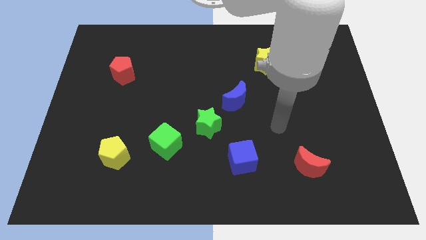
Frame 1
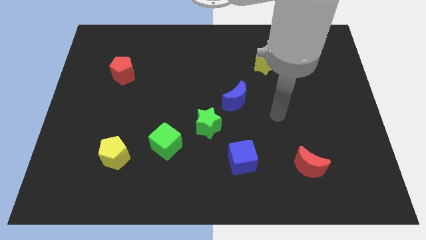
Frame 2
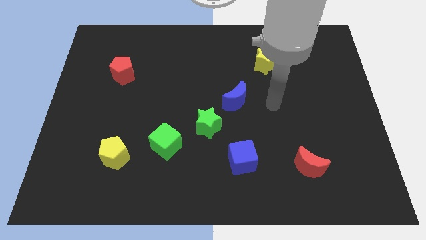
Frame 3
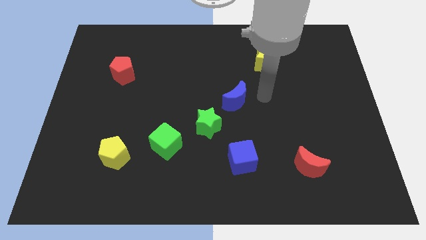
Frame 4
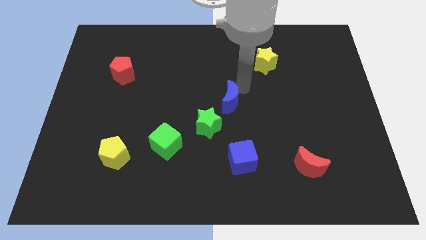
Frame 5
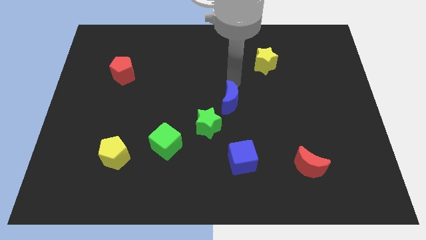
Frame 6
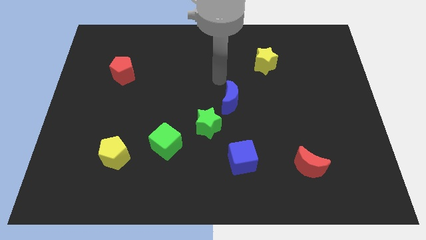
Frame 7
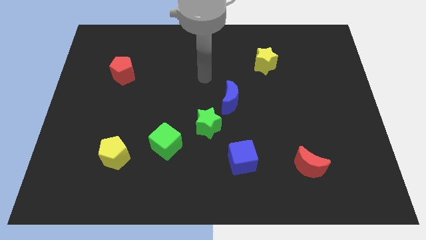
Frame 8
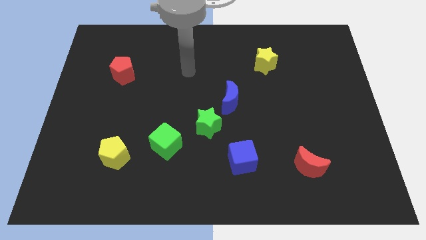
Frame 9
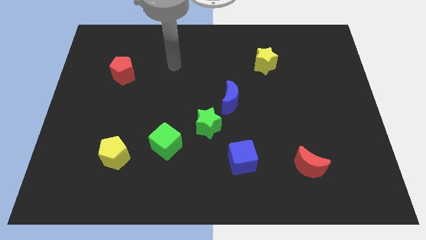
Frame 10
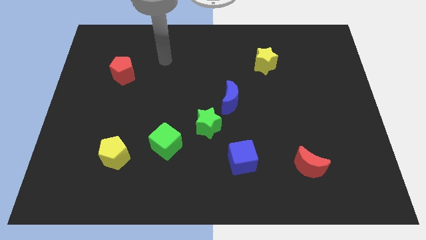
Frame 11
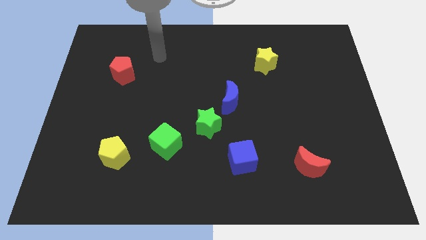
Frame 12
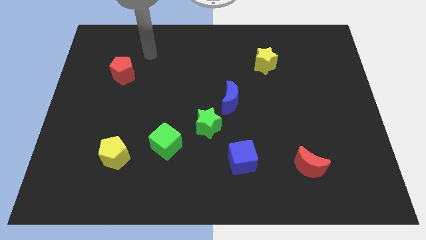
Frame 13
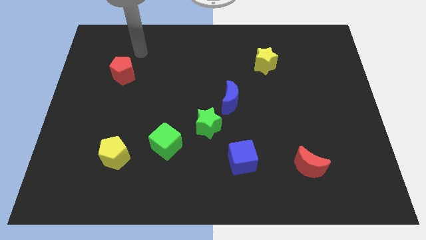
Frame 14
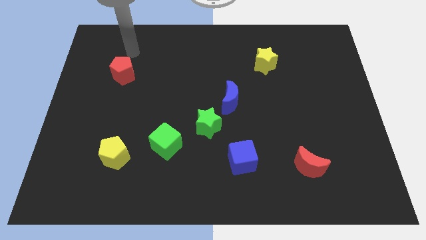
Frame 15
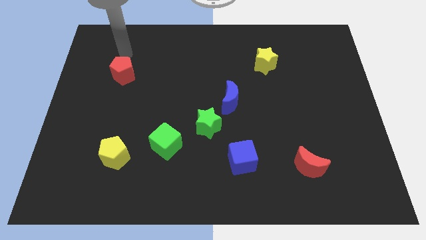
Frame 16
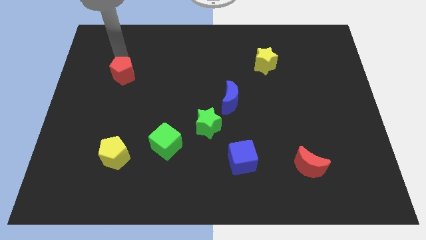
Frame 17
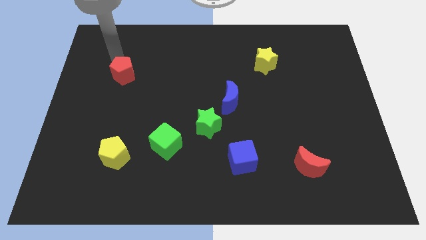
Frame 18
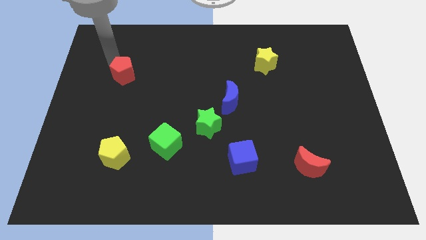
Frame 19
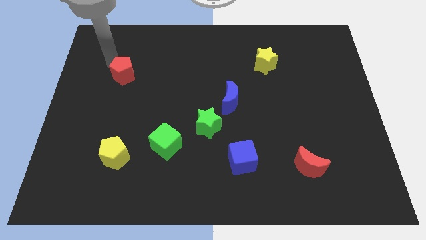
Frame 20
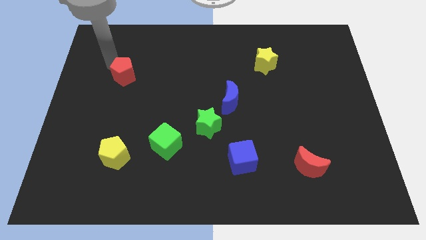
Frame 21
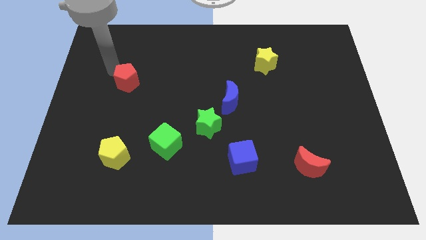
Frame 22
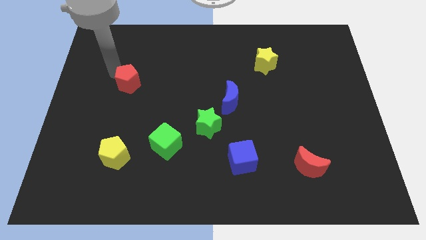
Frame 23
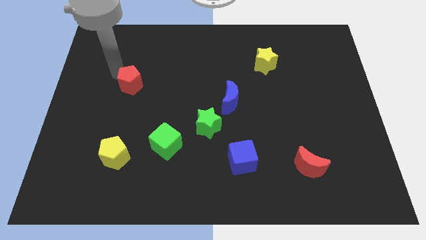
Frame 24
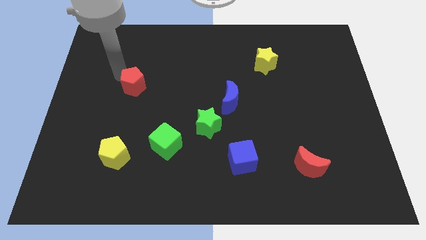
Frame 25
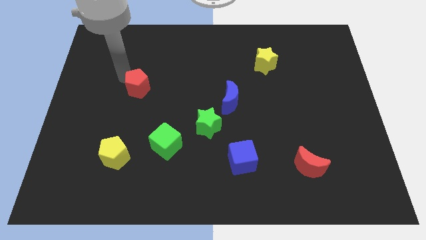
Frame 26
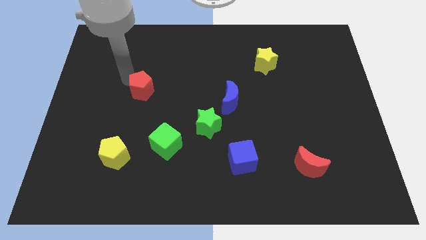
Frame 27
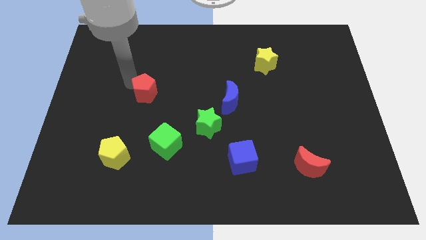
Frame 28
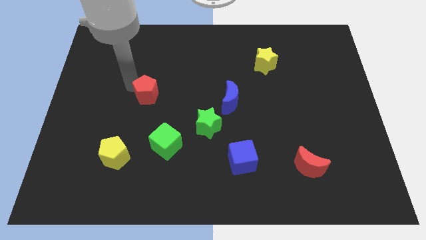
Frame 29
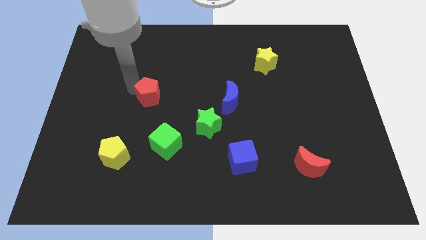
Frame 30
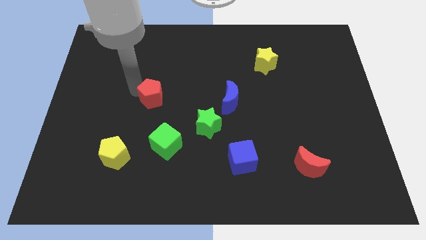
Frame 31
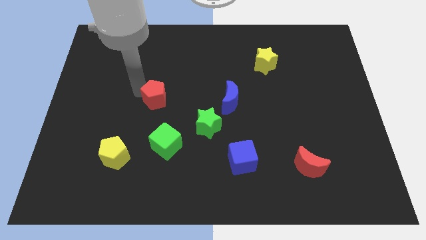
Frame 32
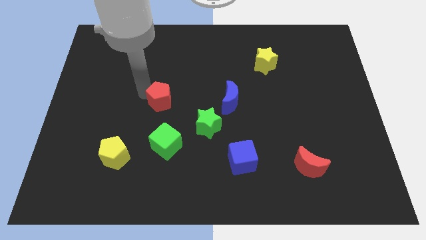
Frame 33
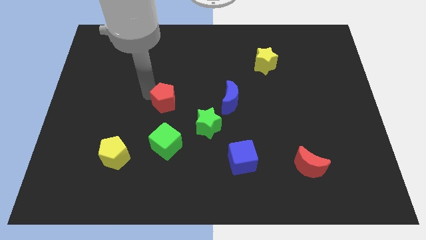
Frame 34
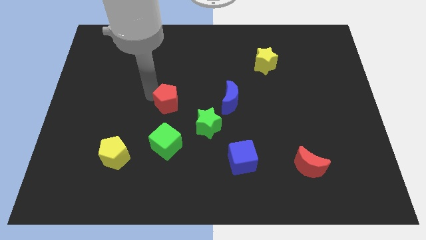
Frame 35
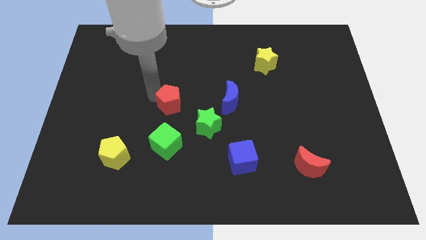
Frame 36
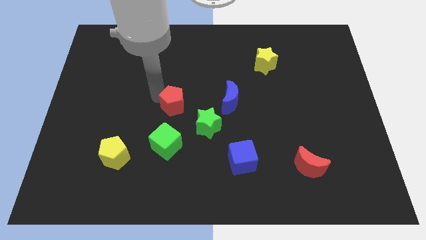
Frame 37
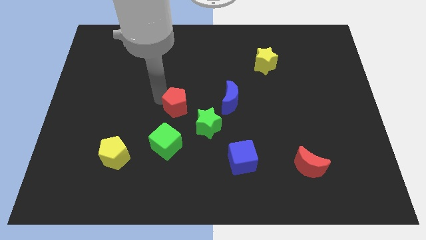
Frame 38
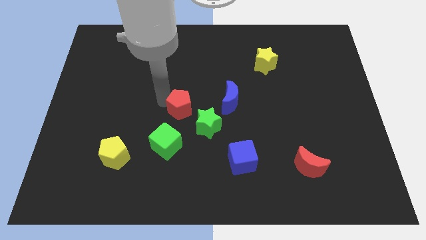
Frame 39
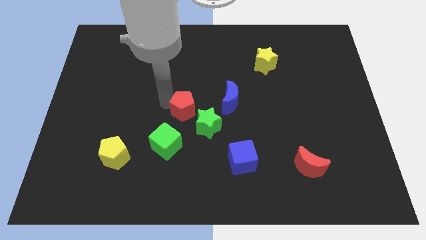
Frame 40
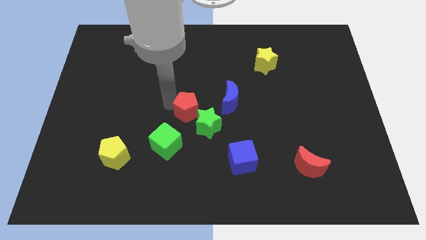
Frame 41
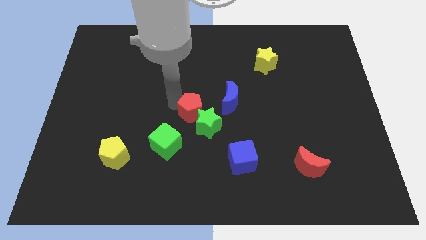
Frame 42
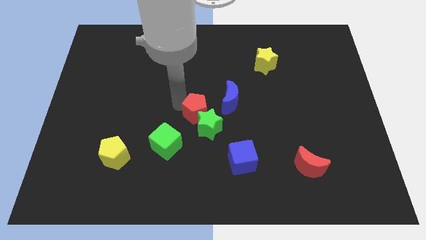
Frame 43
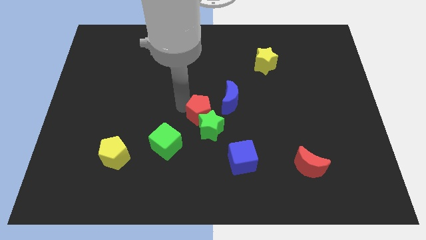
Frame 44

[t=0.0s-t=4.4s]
move the red pentagon to the green star

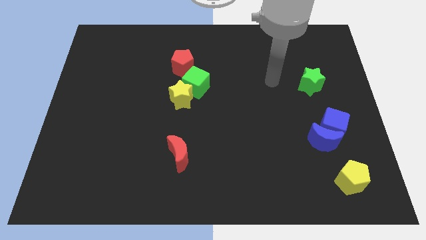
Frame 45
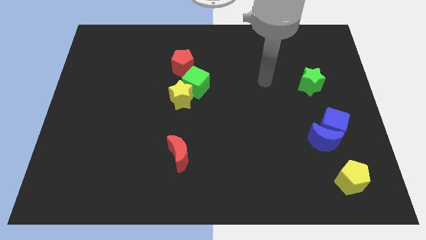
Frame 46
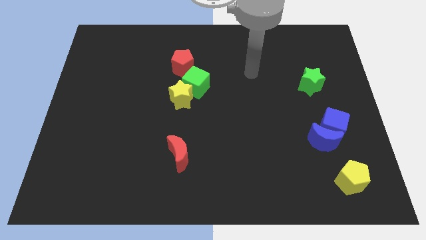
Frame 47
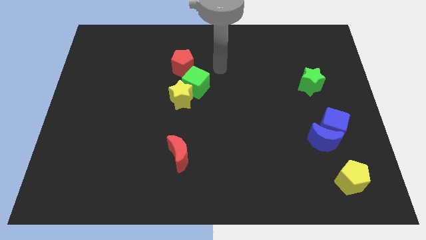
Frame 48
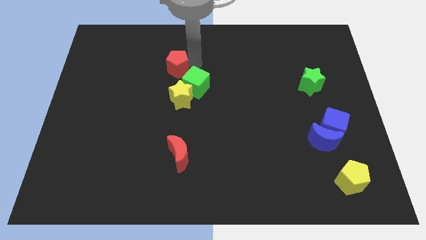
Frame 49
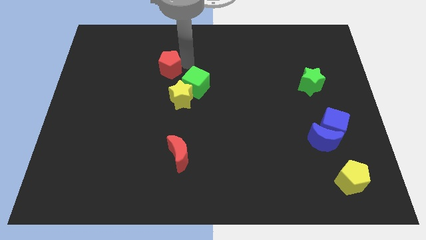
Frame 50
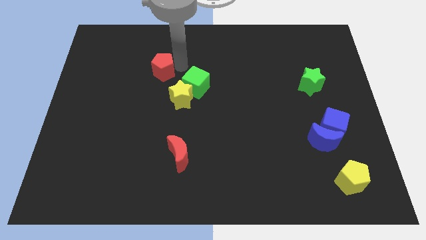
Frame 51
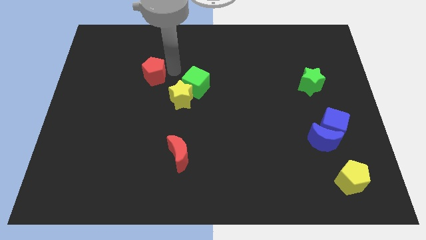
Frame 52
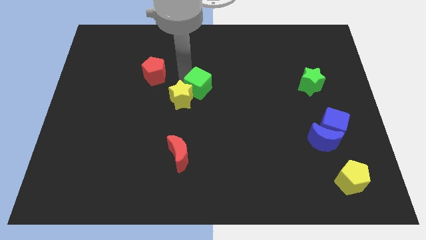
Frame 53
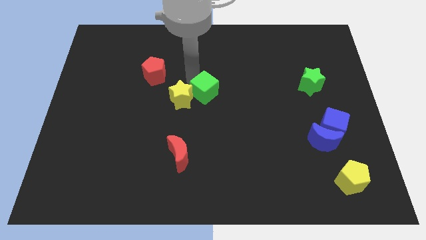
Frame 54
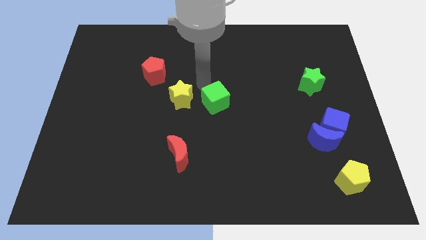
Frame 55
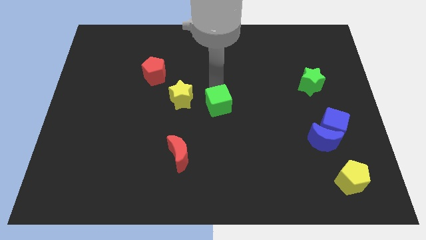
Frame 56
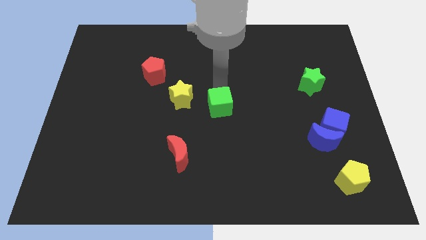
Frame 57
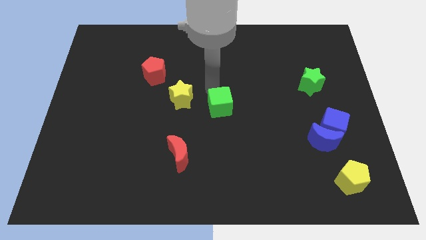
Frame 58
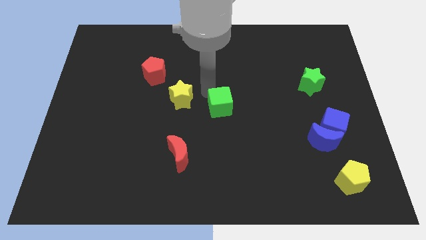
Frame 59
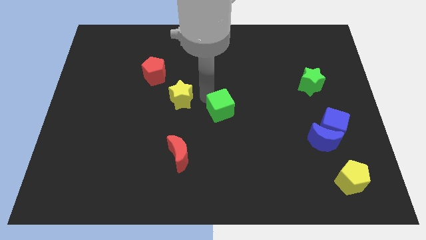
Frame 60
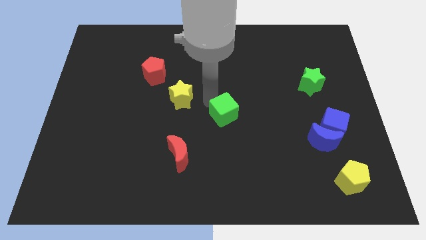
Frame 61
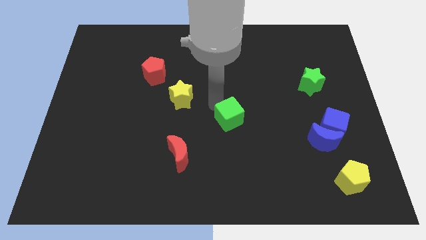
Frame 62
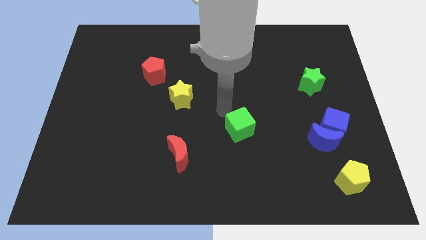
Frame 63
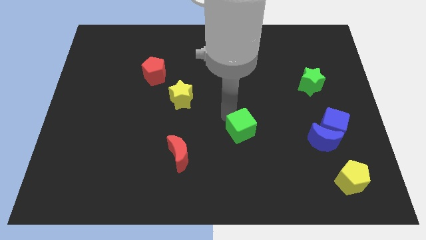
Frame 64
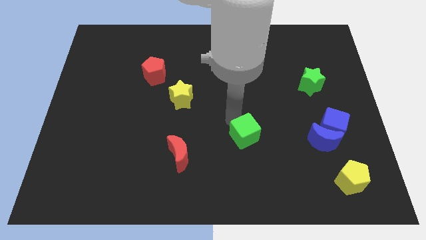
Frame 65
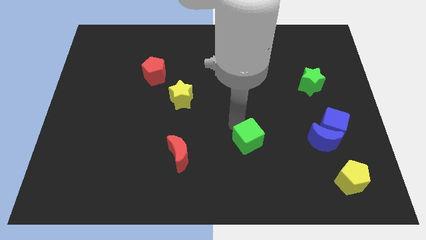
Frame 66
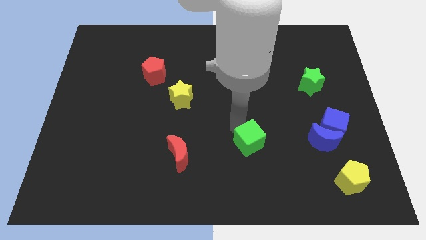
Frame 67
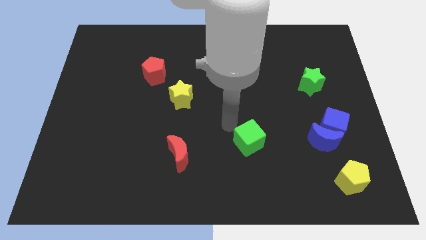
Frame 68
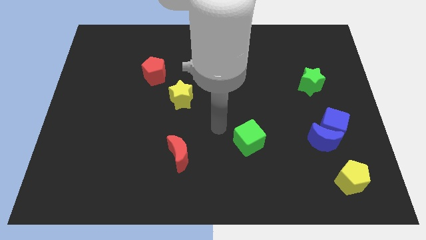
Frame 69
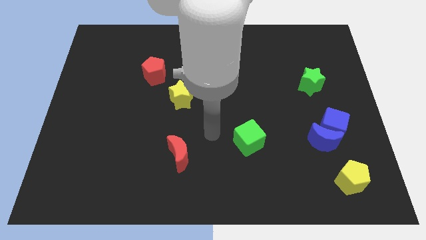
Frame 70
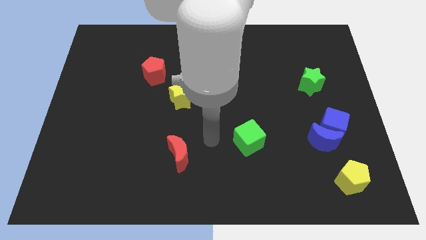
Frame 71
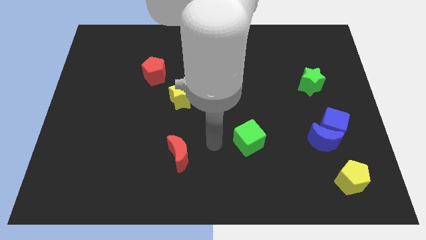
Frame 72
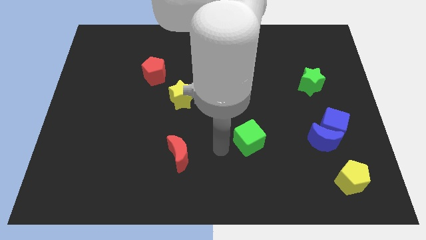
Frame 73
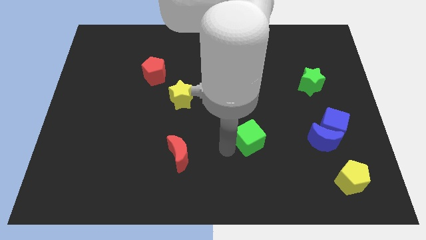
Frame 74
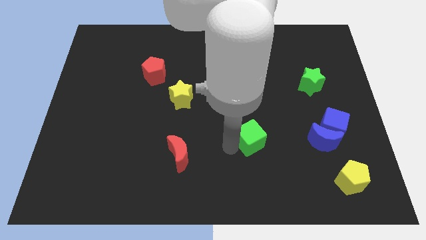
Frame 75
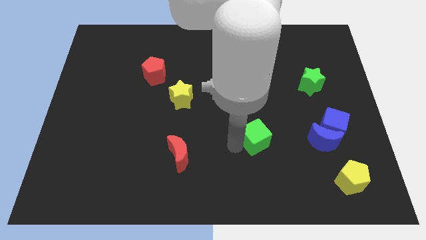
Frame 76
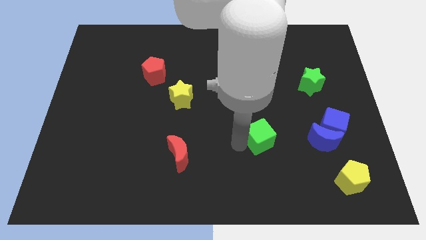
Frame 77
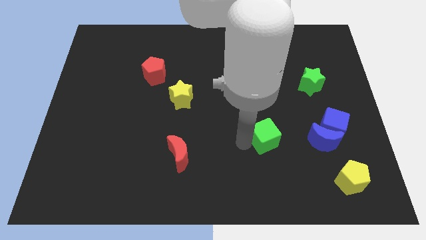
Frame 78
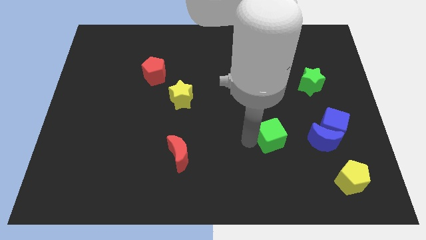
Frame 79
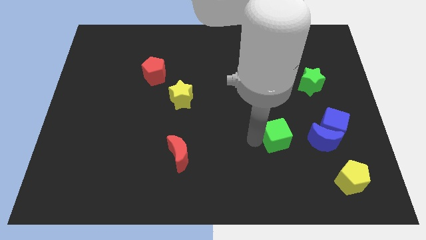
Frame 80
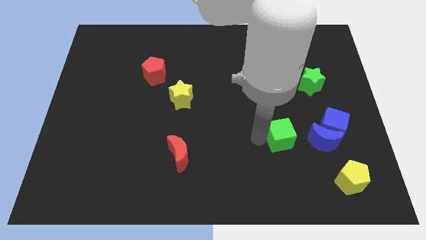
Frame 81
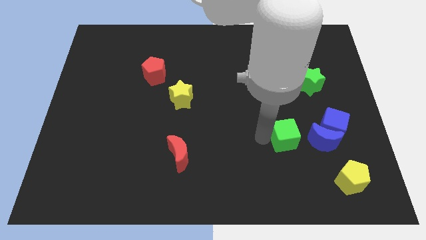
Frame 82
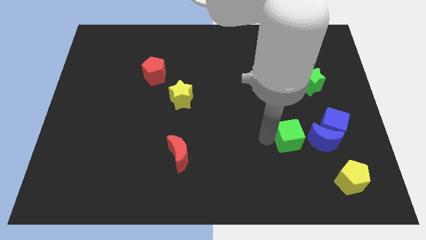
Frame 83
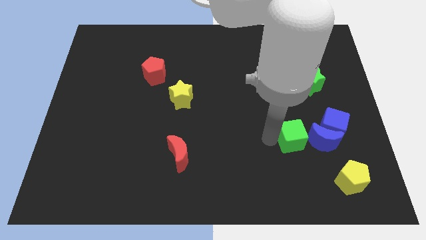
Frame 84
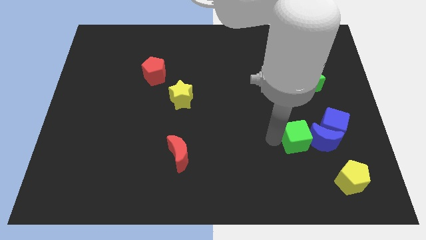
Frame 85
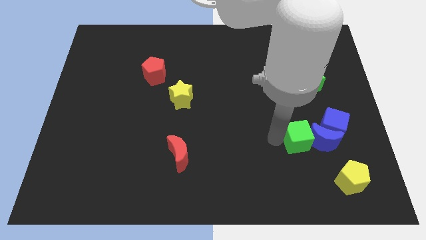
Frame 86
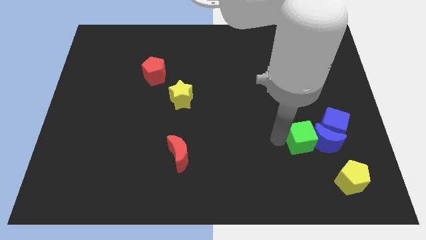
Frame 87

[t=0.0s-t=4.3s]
put the green cube towards the blue moon
